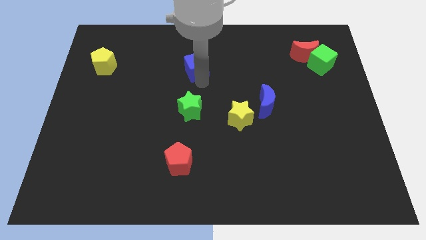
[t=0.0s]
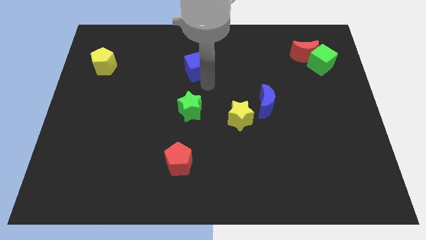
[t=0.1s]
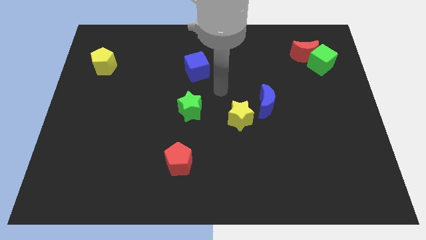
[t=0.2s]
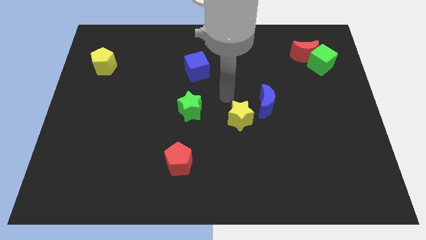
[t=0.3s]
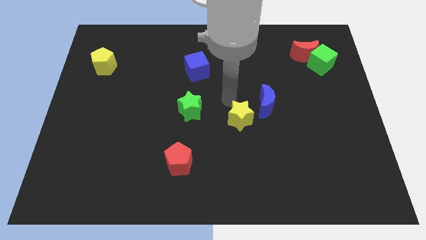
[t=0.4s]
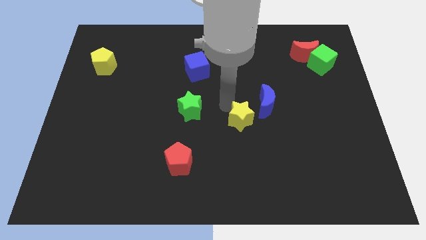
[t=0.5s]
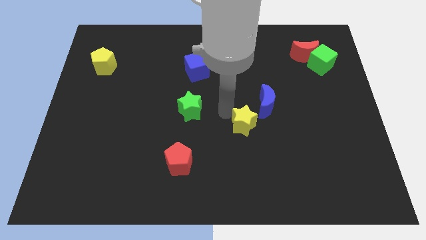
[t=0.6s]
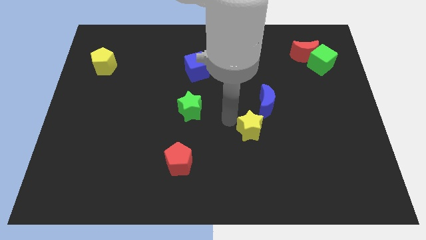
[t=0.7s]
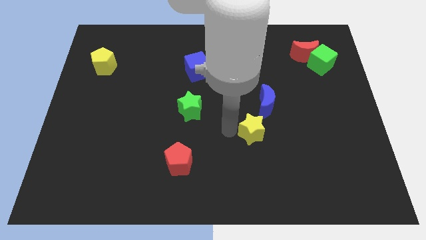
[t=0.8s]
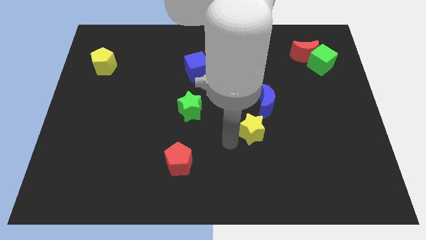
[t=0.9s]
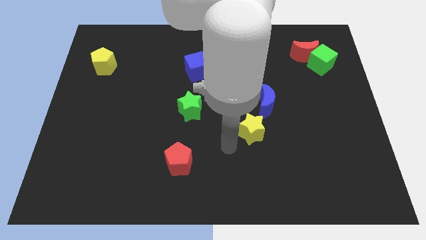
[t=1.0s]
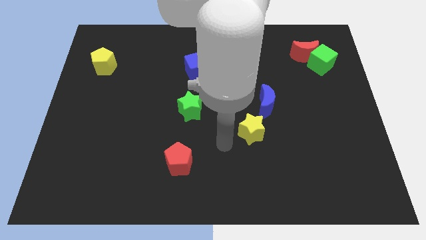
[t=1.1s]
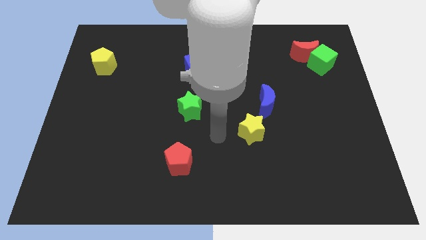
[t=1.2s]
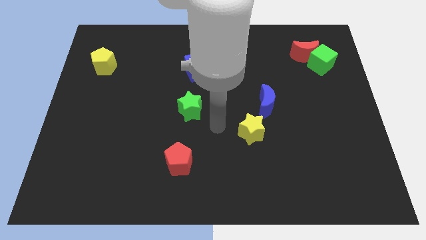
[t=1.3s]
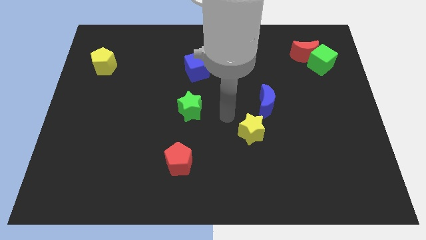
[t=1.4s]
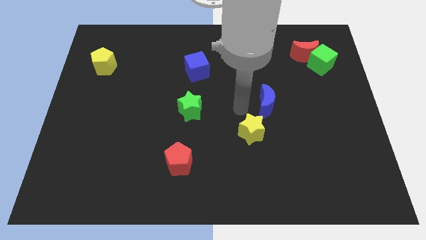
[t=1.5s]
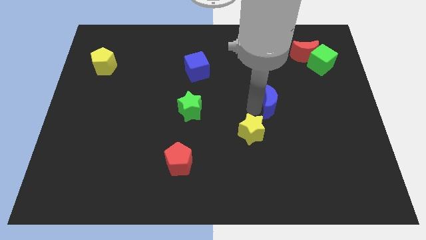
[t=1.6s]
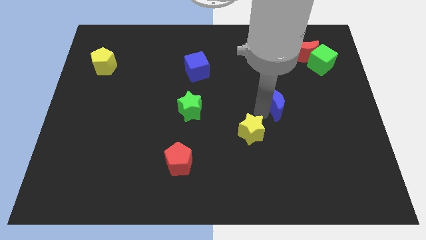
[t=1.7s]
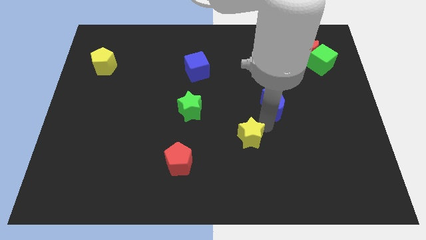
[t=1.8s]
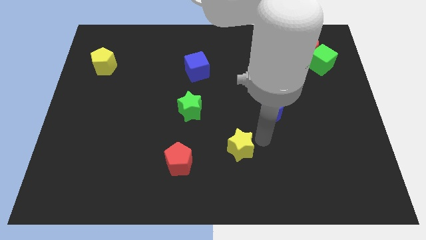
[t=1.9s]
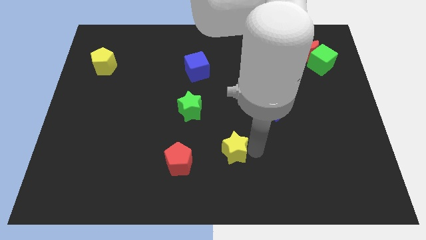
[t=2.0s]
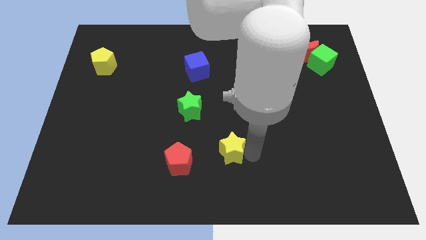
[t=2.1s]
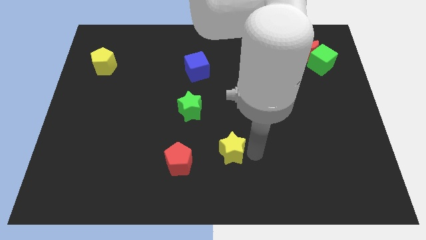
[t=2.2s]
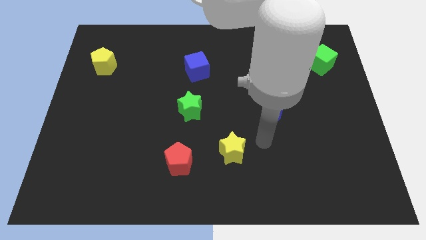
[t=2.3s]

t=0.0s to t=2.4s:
place the yellow star to the right of the red pentagon

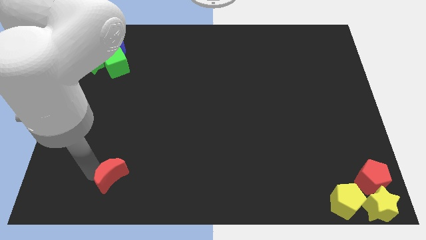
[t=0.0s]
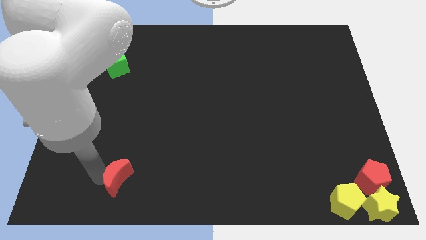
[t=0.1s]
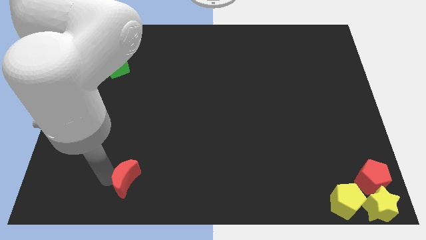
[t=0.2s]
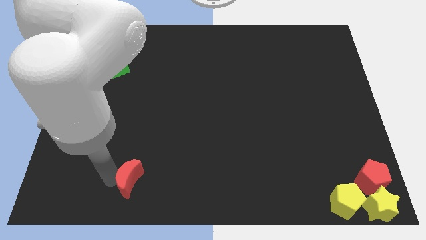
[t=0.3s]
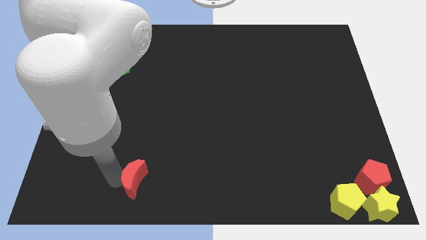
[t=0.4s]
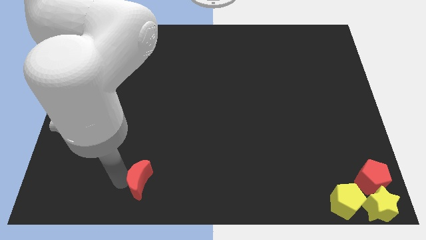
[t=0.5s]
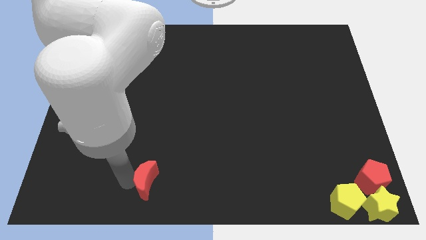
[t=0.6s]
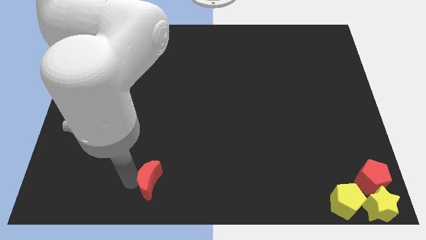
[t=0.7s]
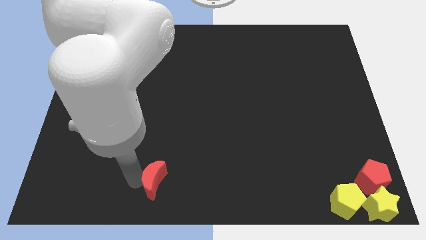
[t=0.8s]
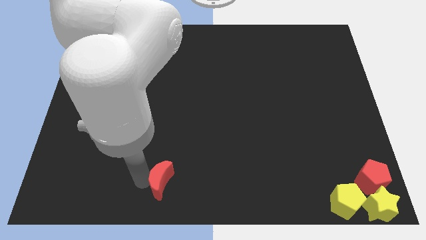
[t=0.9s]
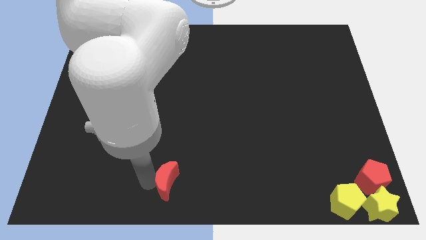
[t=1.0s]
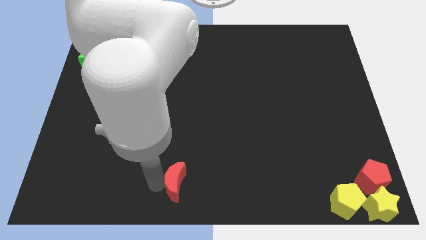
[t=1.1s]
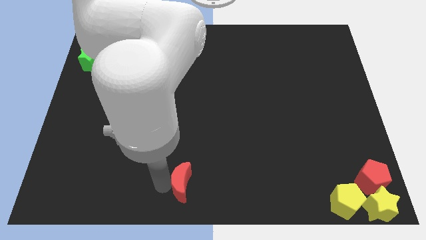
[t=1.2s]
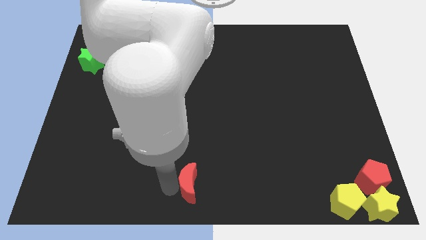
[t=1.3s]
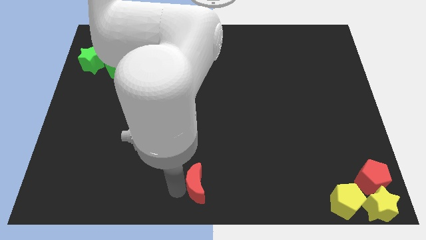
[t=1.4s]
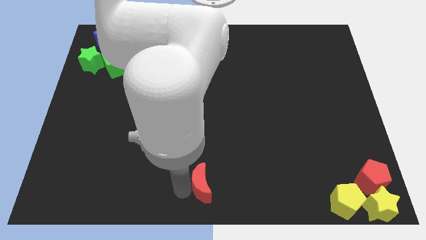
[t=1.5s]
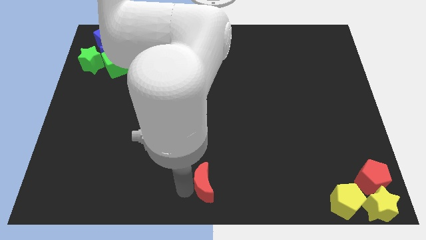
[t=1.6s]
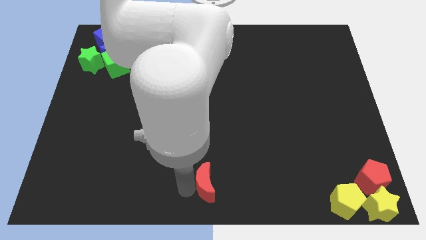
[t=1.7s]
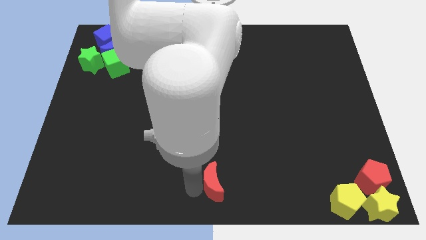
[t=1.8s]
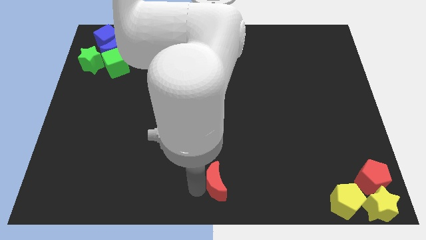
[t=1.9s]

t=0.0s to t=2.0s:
place the red crescent at the bottom center of the board

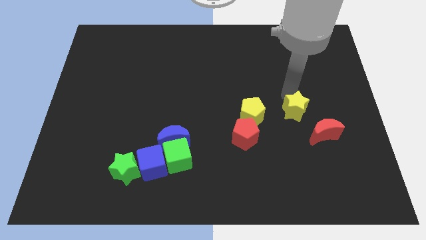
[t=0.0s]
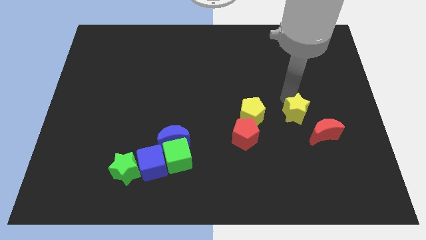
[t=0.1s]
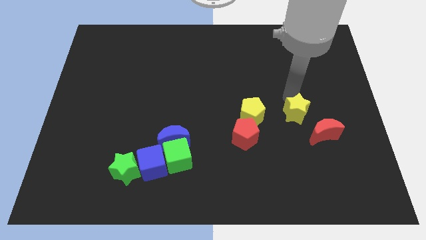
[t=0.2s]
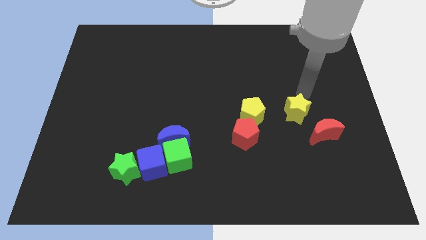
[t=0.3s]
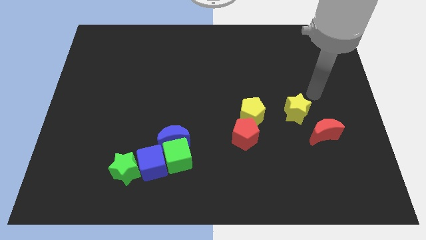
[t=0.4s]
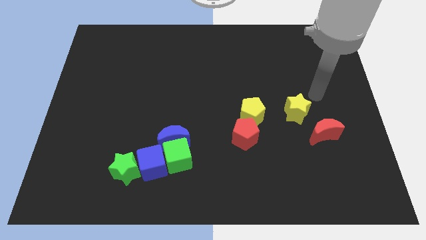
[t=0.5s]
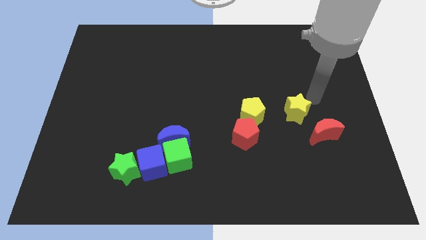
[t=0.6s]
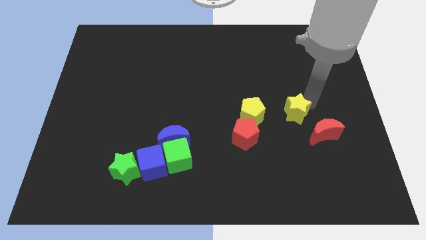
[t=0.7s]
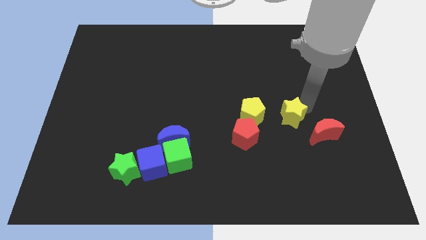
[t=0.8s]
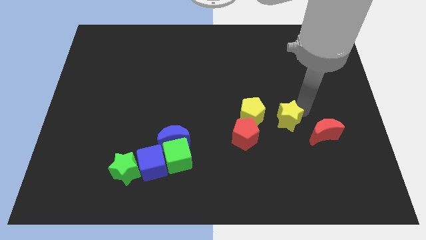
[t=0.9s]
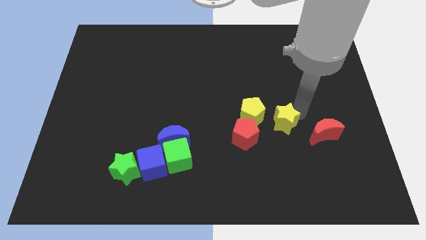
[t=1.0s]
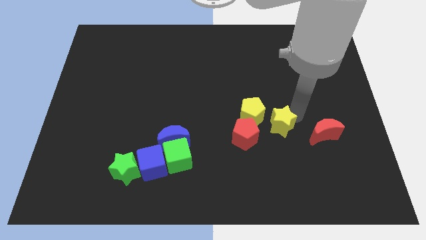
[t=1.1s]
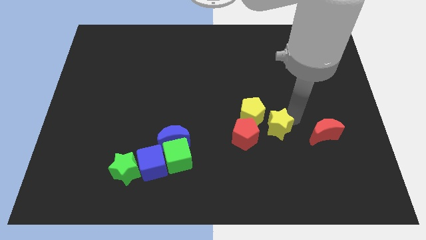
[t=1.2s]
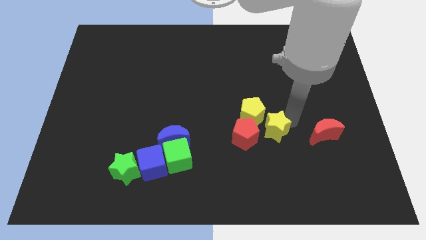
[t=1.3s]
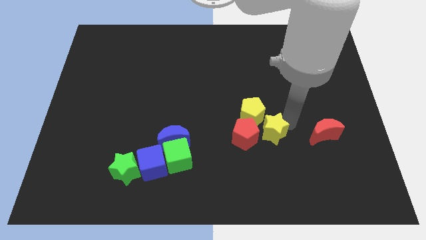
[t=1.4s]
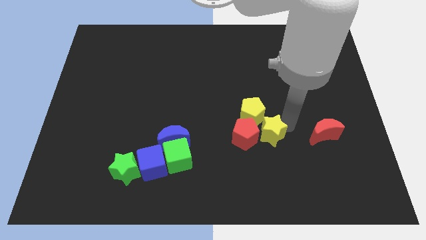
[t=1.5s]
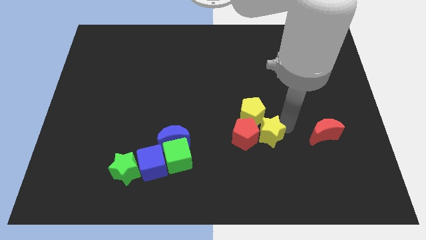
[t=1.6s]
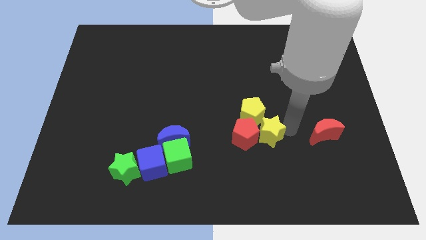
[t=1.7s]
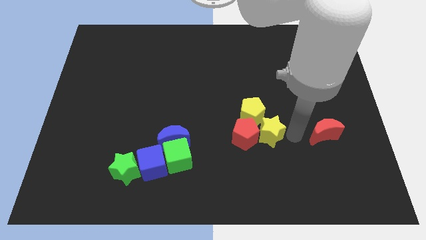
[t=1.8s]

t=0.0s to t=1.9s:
move yellow star into yellow pentagon and red pentagon

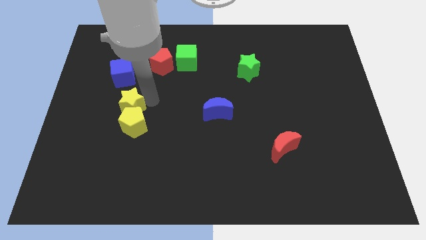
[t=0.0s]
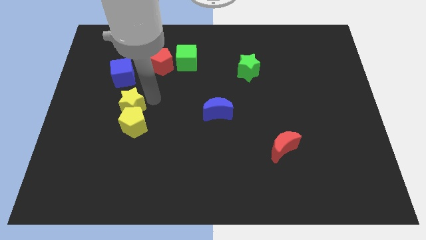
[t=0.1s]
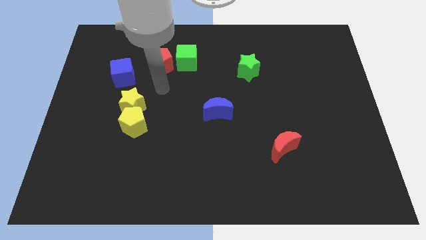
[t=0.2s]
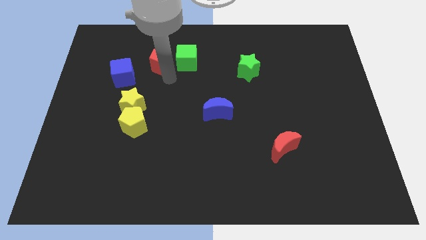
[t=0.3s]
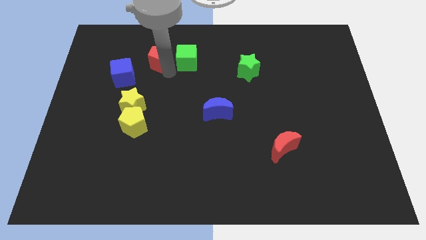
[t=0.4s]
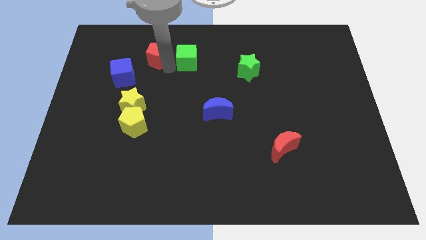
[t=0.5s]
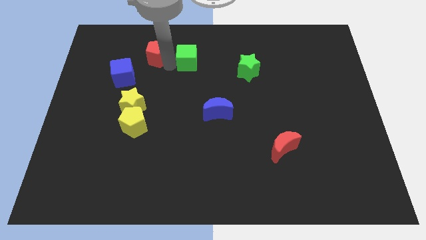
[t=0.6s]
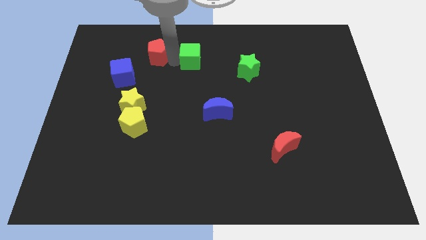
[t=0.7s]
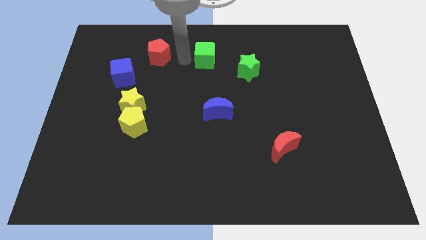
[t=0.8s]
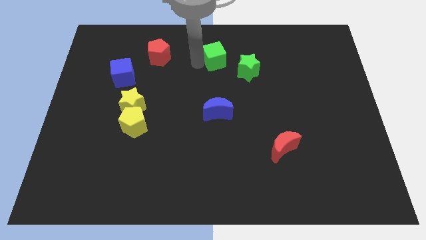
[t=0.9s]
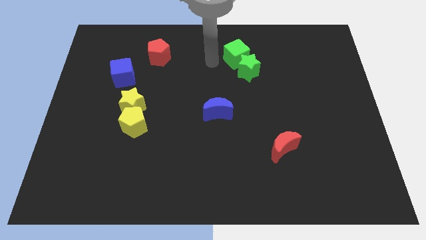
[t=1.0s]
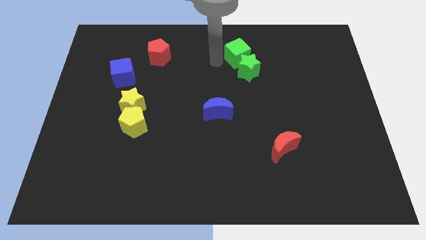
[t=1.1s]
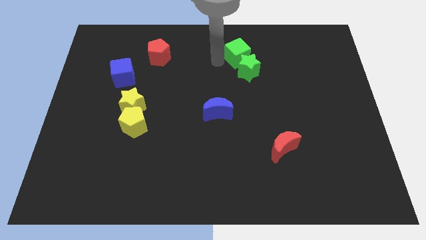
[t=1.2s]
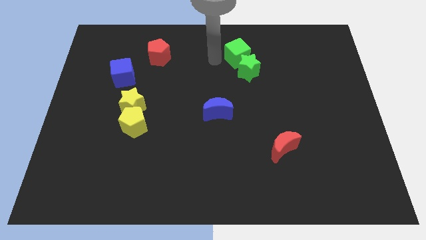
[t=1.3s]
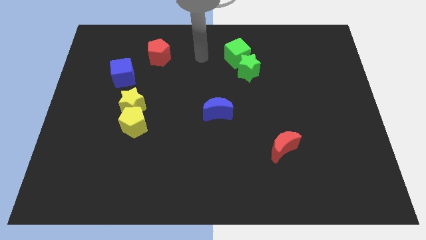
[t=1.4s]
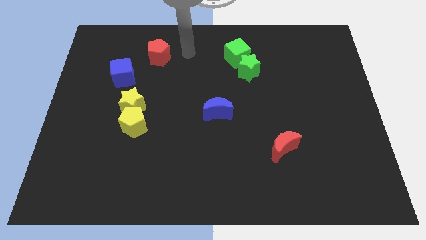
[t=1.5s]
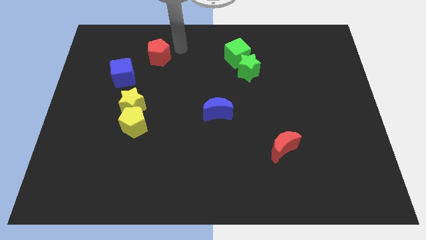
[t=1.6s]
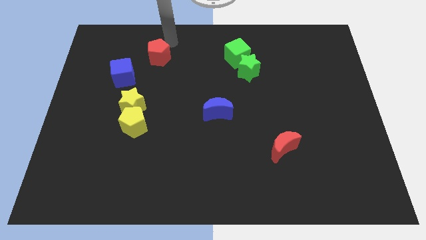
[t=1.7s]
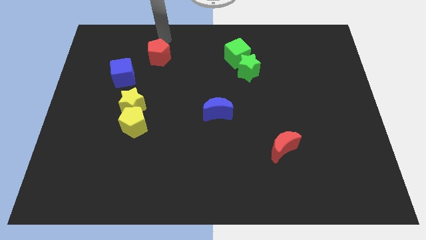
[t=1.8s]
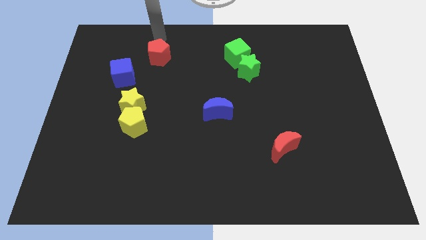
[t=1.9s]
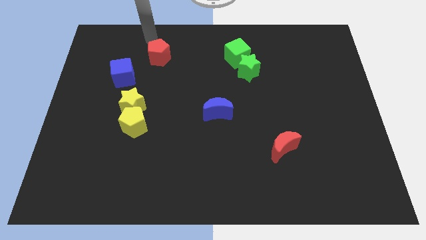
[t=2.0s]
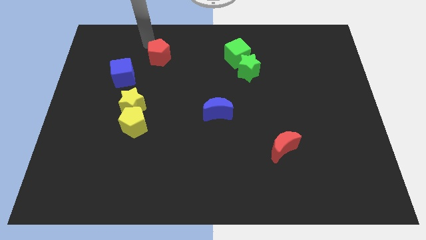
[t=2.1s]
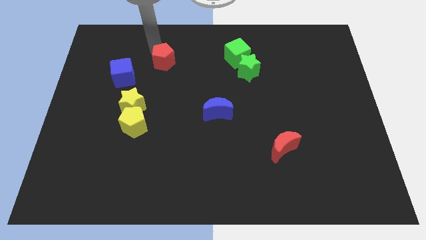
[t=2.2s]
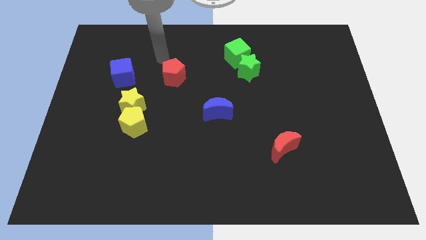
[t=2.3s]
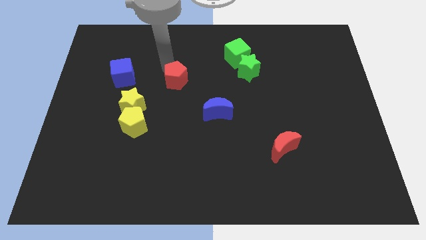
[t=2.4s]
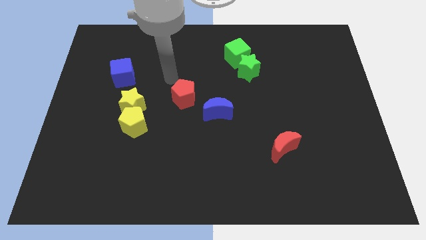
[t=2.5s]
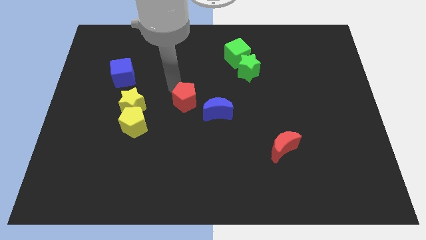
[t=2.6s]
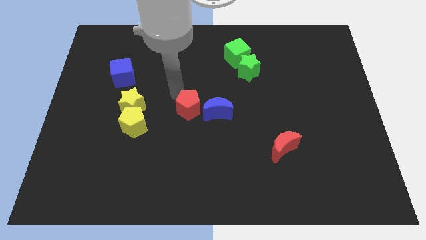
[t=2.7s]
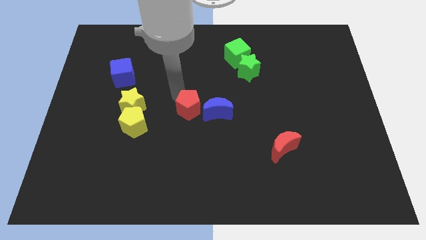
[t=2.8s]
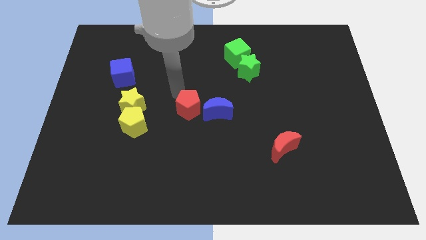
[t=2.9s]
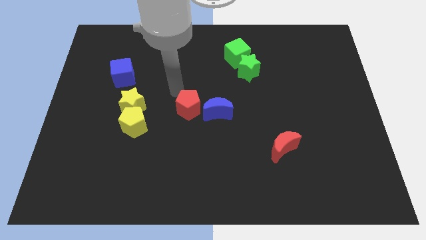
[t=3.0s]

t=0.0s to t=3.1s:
move the red pentagon diagonally bottom left to the green blocks
